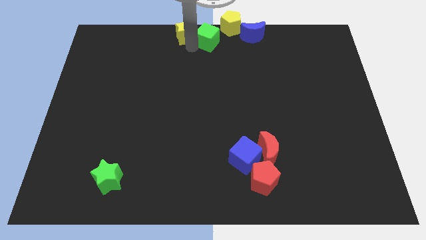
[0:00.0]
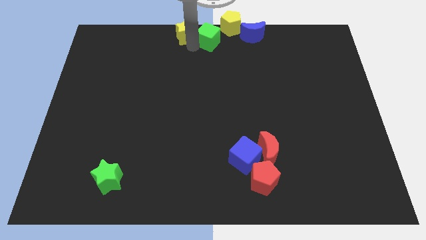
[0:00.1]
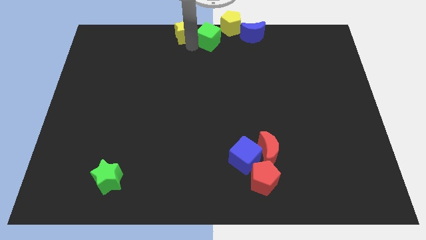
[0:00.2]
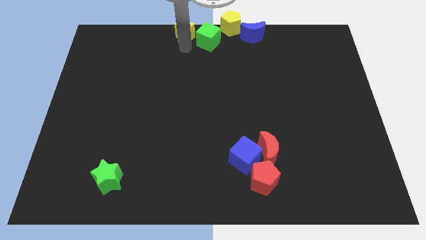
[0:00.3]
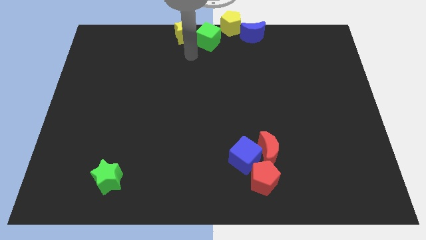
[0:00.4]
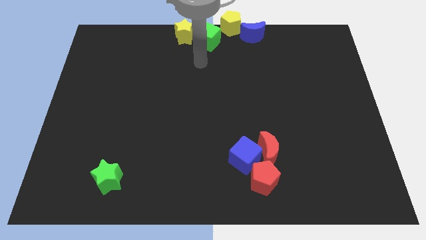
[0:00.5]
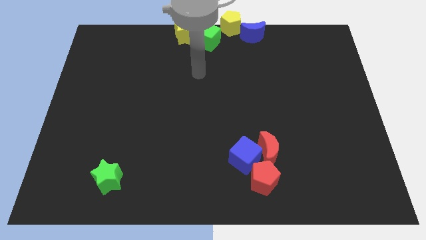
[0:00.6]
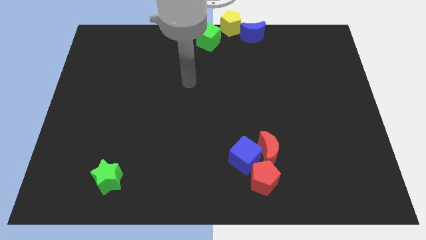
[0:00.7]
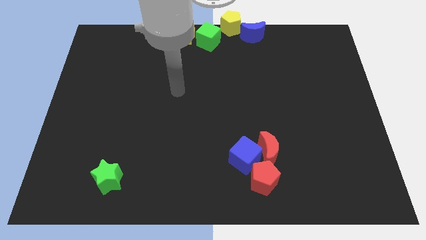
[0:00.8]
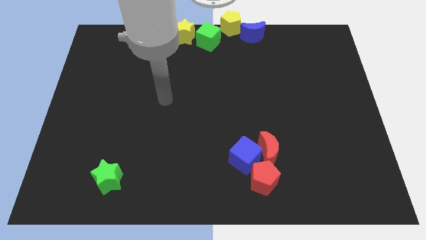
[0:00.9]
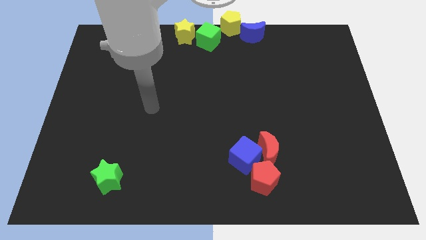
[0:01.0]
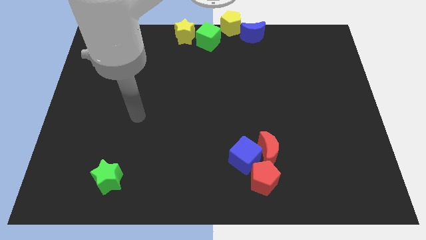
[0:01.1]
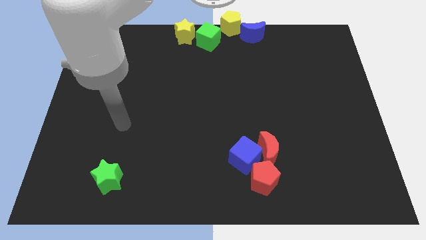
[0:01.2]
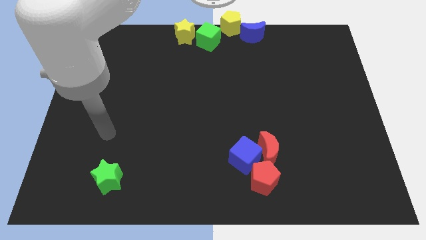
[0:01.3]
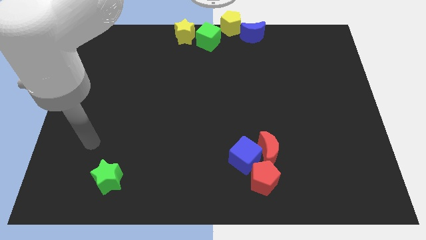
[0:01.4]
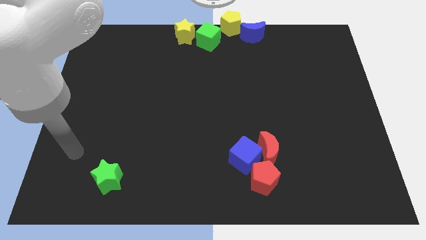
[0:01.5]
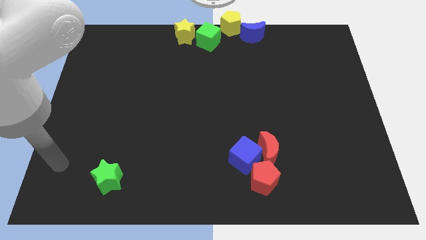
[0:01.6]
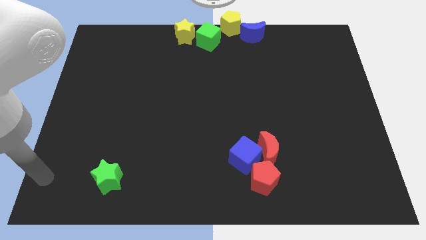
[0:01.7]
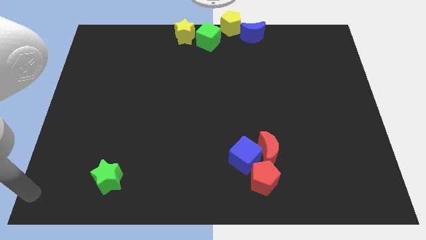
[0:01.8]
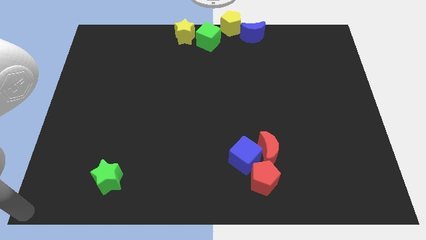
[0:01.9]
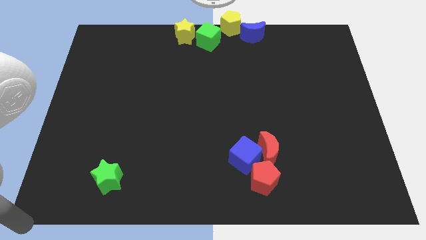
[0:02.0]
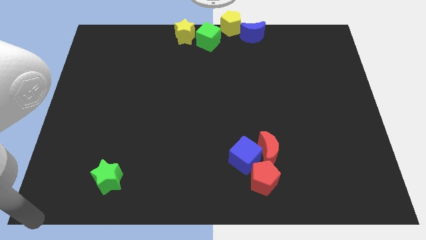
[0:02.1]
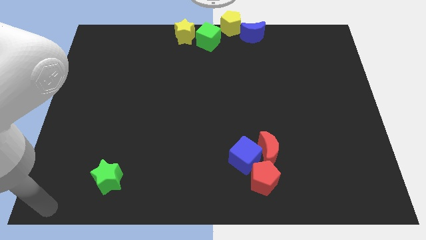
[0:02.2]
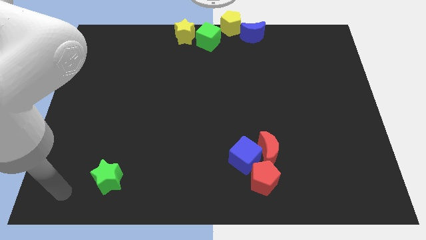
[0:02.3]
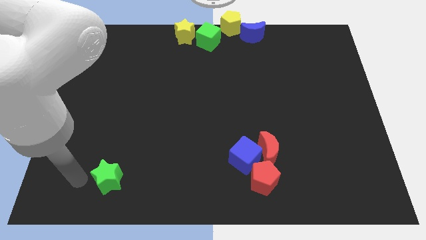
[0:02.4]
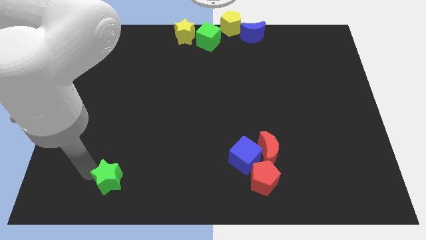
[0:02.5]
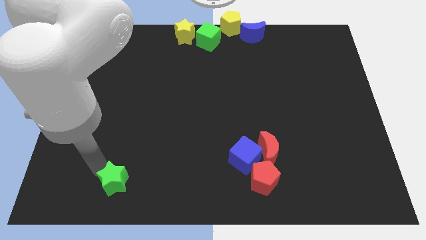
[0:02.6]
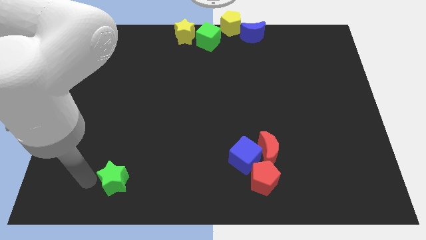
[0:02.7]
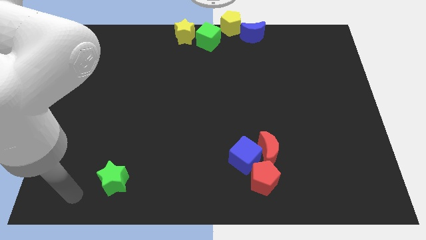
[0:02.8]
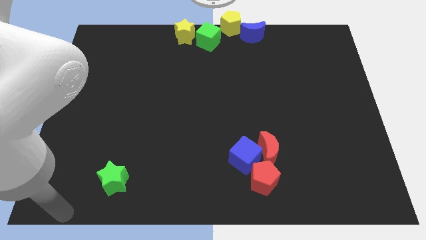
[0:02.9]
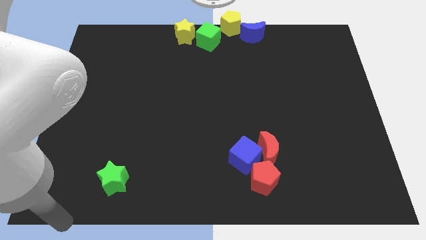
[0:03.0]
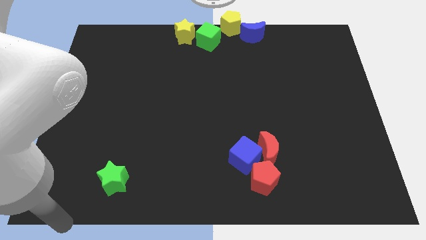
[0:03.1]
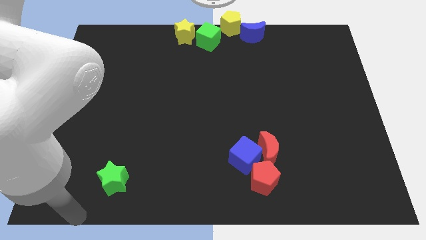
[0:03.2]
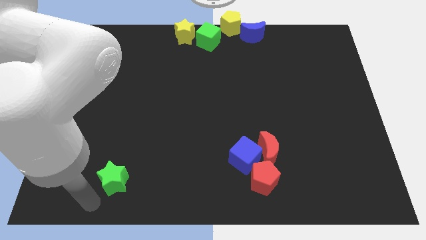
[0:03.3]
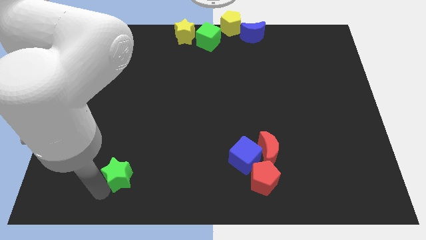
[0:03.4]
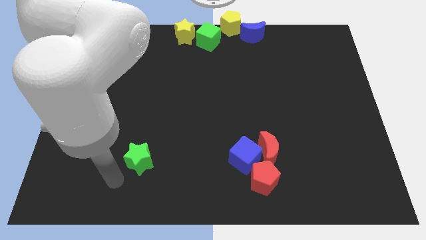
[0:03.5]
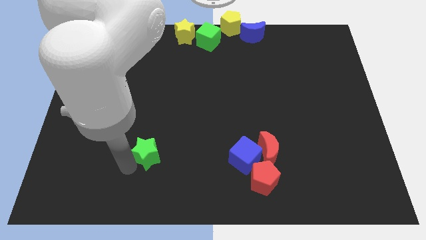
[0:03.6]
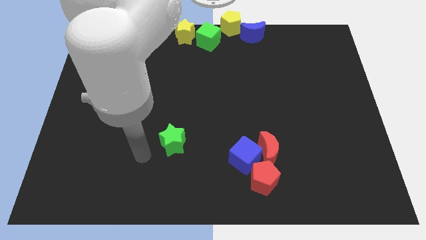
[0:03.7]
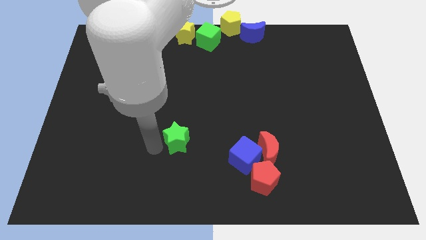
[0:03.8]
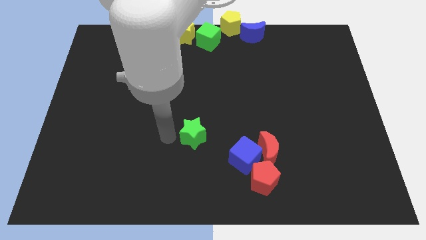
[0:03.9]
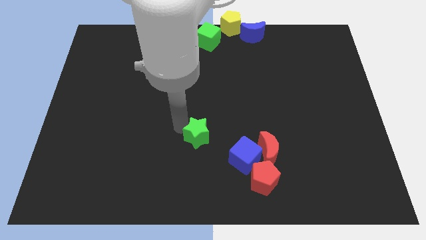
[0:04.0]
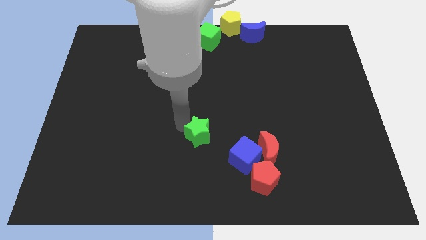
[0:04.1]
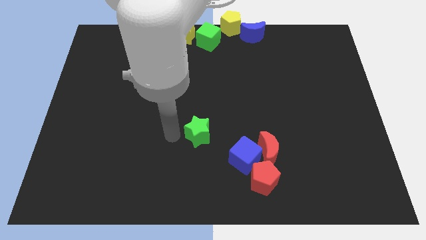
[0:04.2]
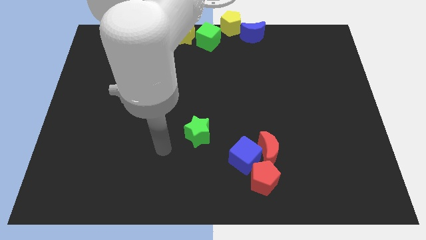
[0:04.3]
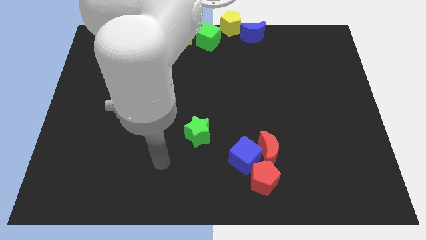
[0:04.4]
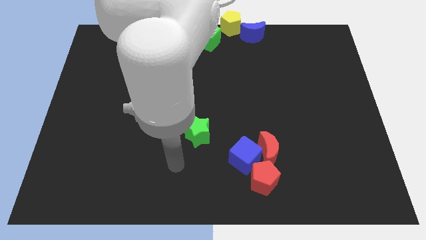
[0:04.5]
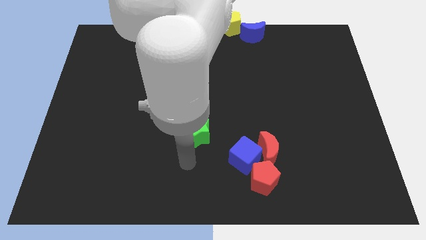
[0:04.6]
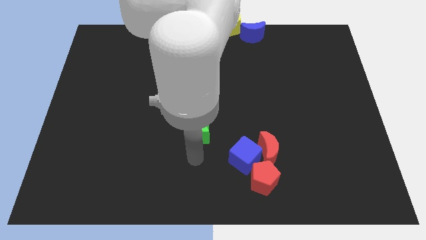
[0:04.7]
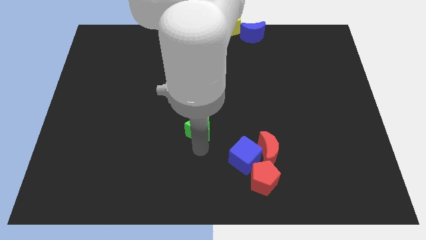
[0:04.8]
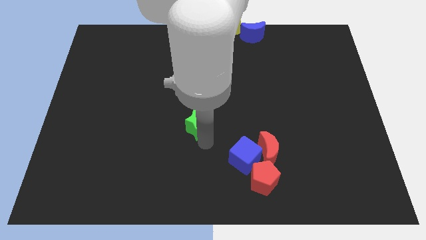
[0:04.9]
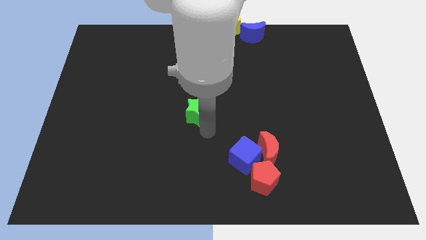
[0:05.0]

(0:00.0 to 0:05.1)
move the green star to the top left side of the blue cube

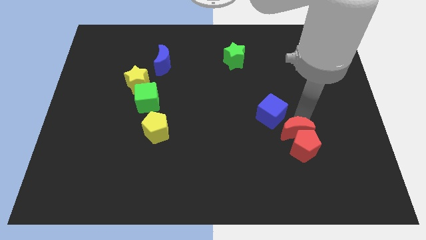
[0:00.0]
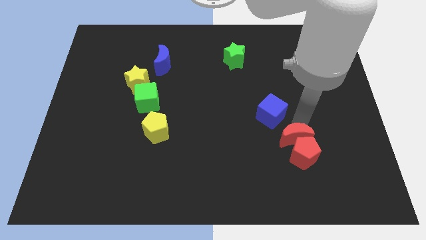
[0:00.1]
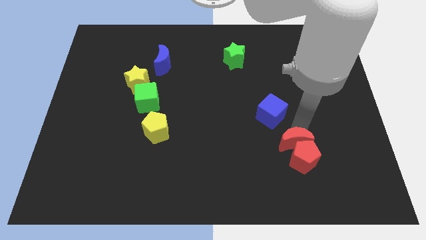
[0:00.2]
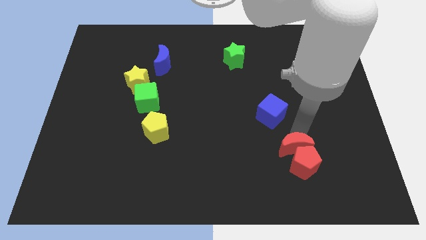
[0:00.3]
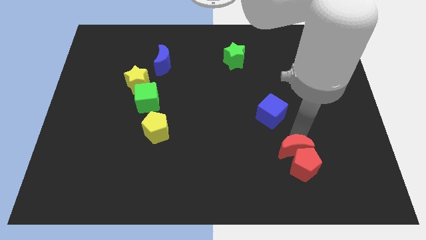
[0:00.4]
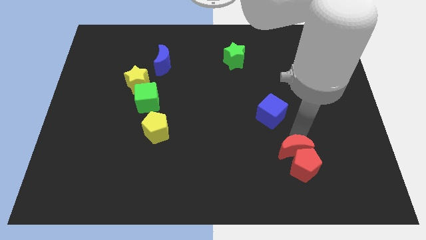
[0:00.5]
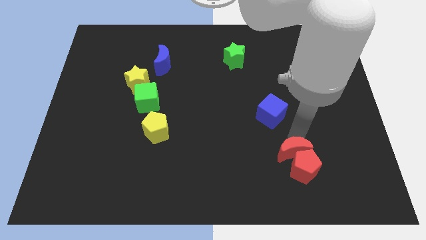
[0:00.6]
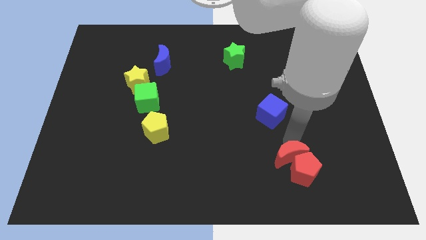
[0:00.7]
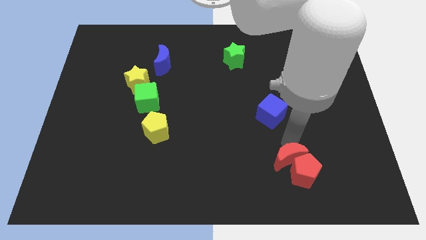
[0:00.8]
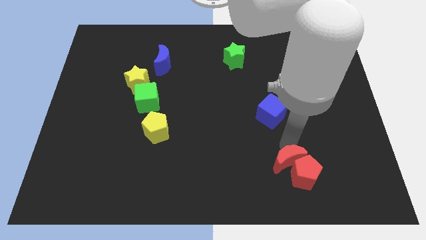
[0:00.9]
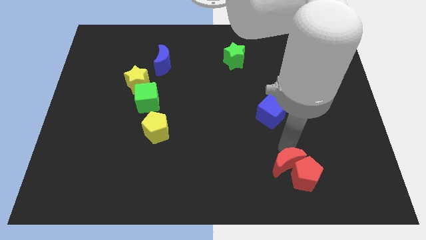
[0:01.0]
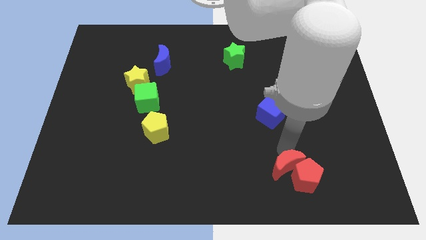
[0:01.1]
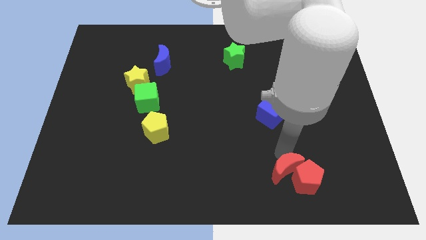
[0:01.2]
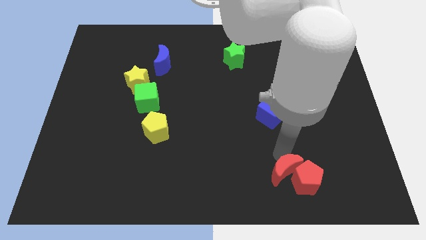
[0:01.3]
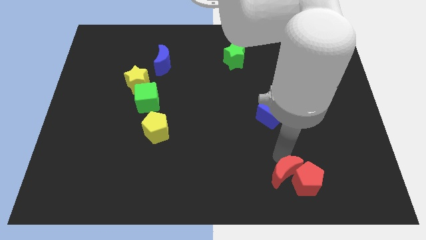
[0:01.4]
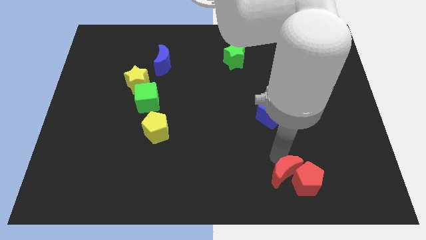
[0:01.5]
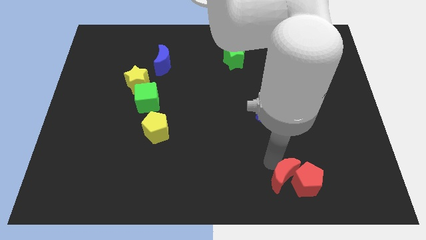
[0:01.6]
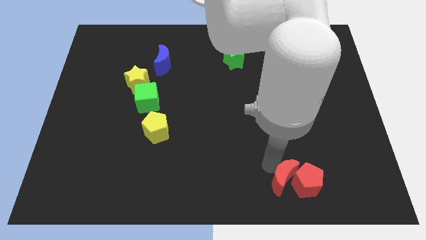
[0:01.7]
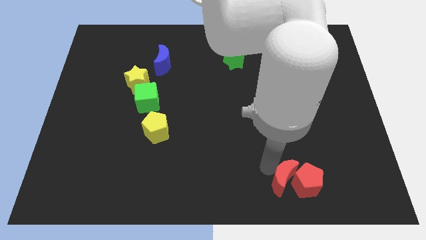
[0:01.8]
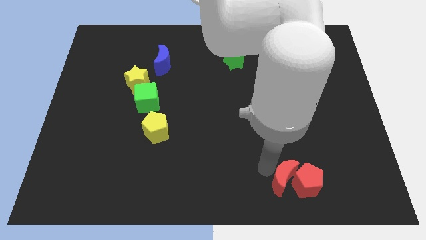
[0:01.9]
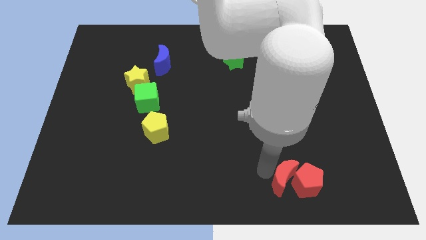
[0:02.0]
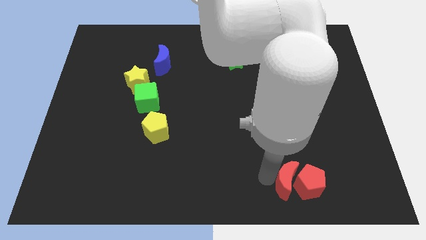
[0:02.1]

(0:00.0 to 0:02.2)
push red moon to the center bottom

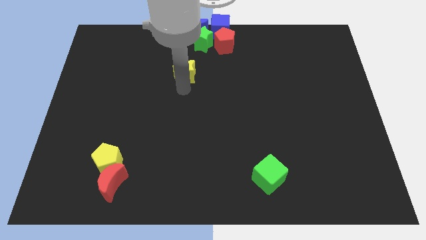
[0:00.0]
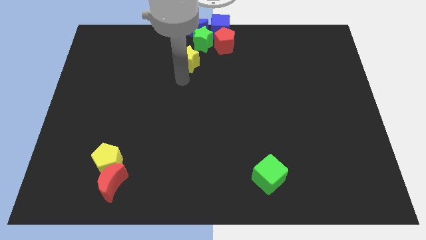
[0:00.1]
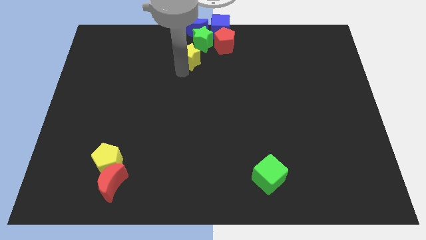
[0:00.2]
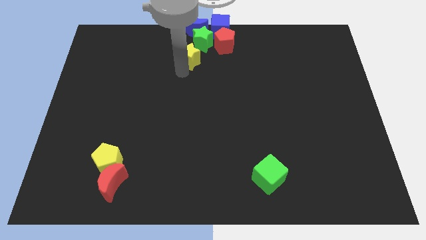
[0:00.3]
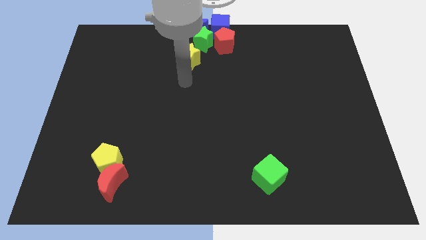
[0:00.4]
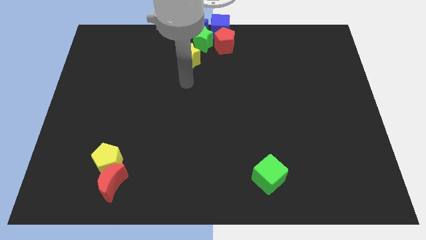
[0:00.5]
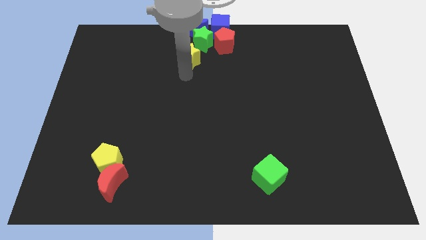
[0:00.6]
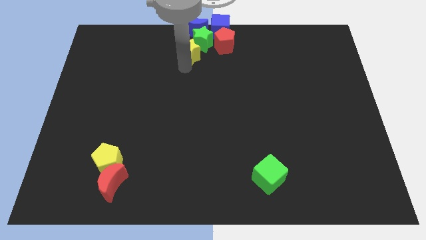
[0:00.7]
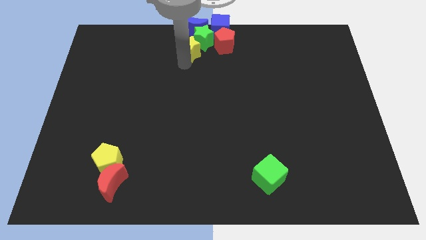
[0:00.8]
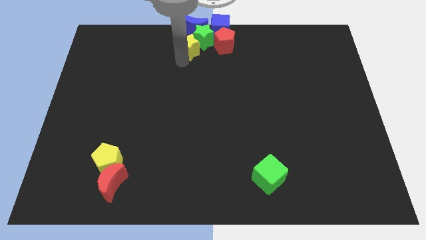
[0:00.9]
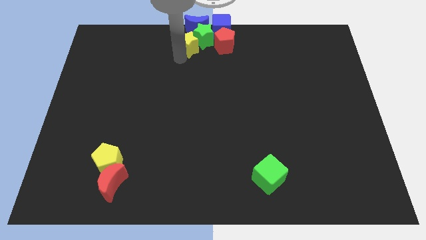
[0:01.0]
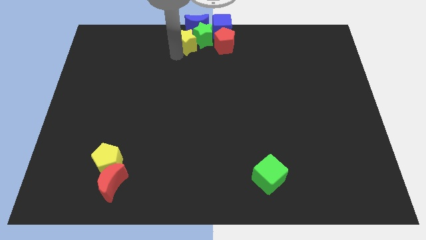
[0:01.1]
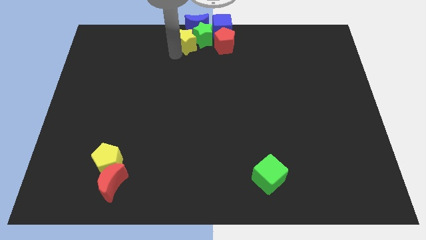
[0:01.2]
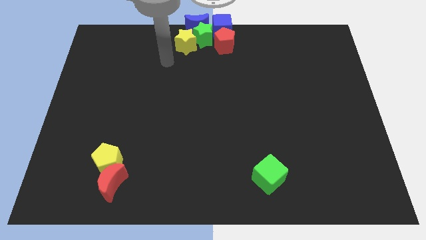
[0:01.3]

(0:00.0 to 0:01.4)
push the yellow star into the green star

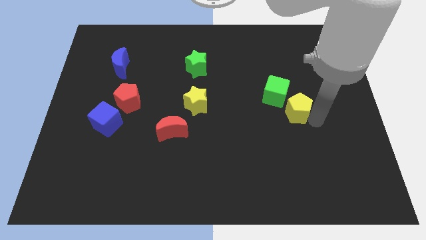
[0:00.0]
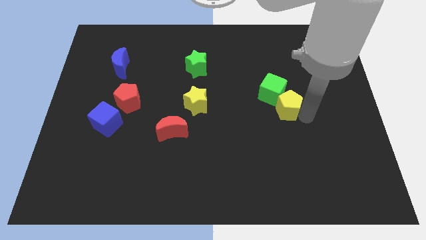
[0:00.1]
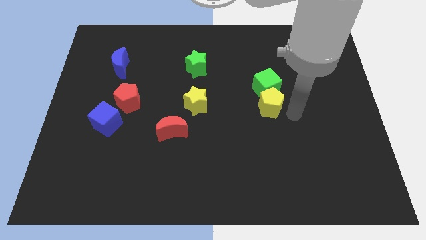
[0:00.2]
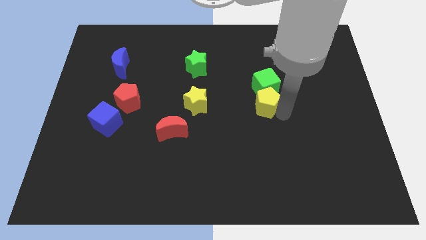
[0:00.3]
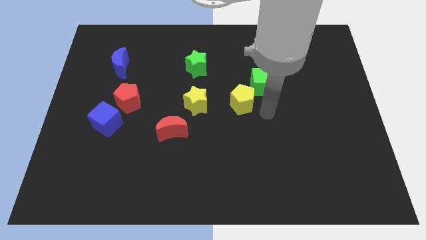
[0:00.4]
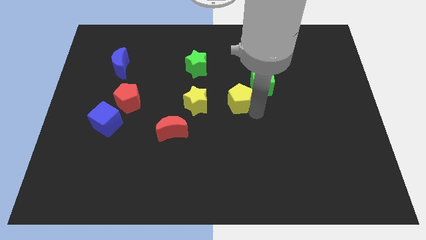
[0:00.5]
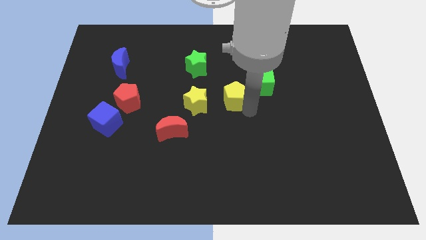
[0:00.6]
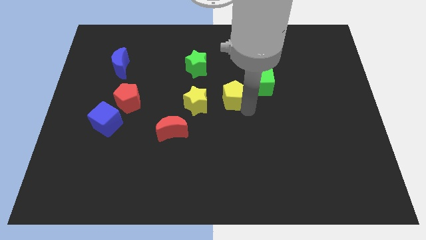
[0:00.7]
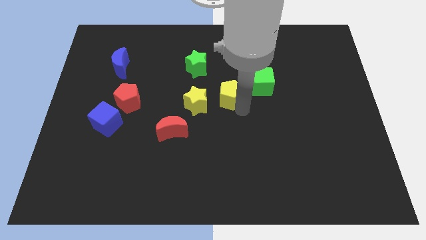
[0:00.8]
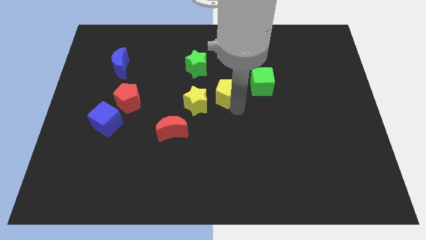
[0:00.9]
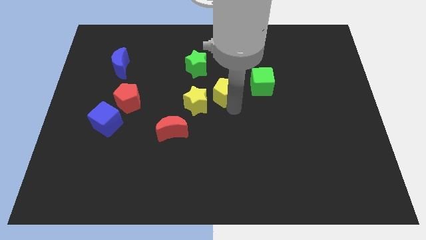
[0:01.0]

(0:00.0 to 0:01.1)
place the yellow pentagon in between yellow star and green cube
